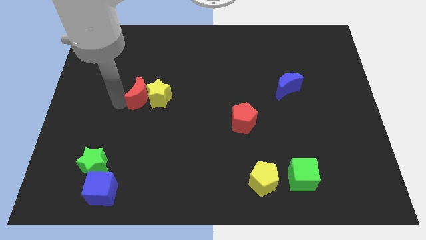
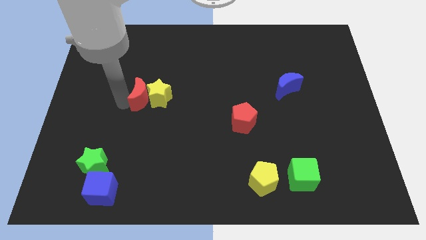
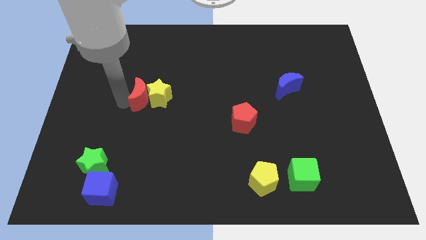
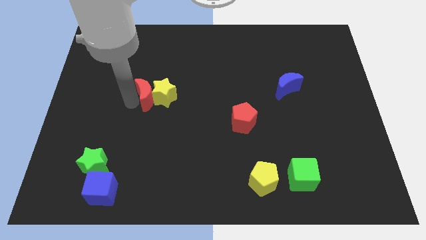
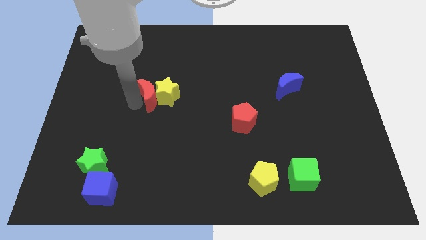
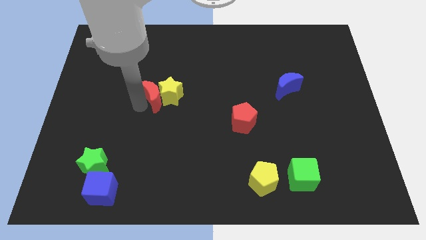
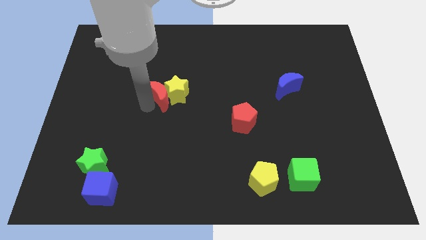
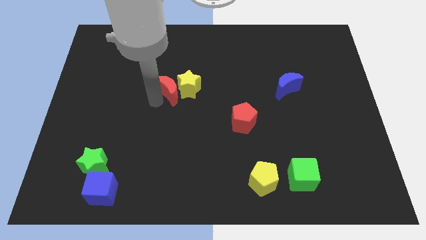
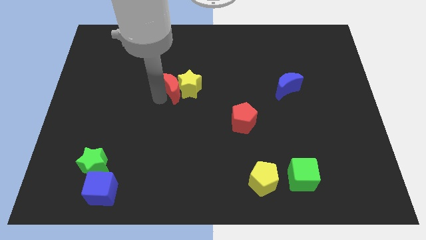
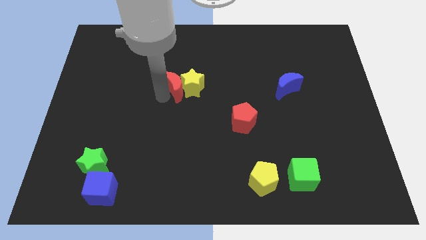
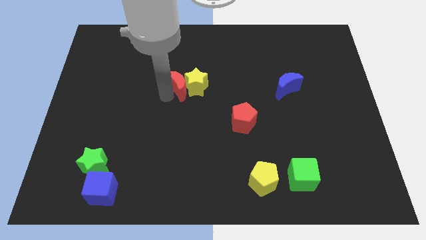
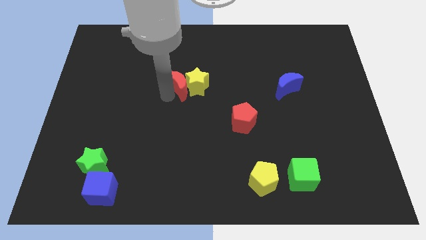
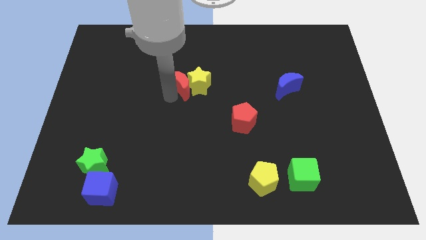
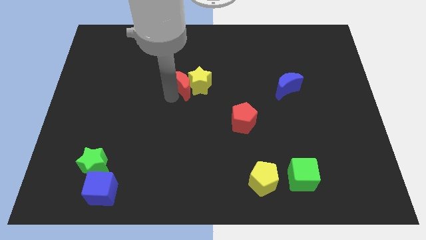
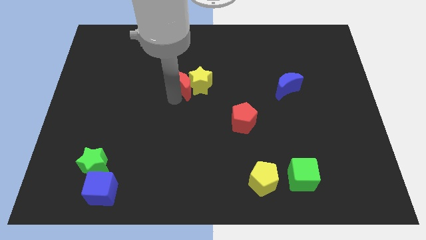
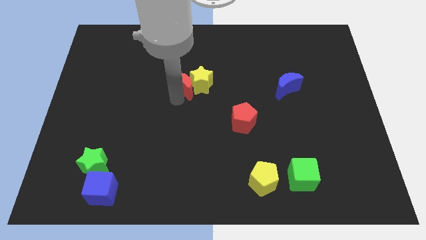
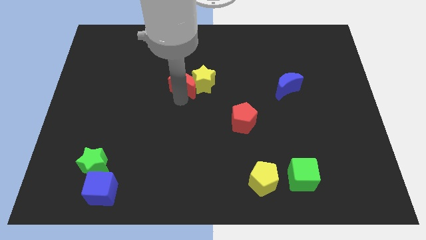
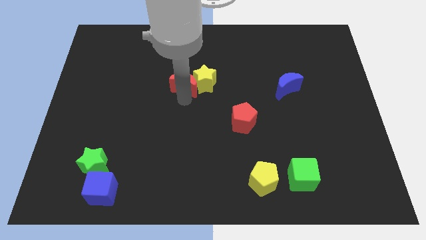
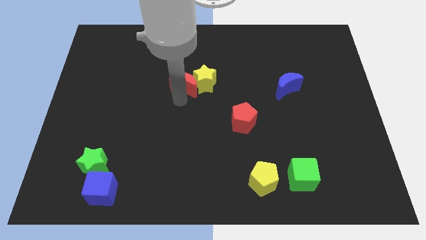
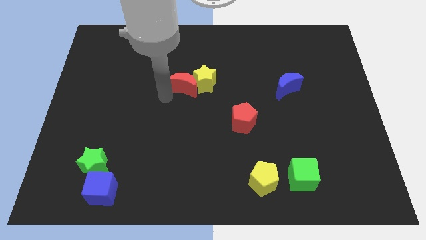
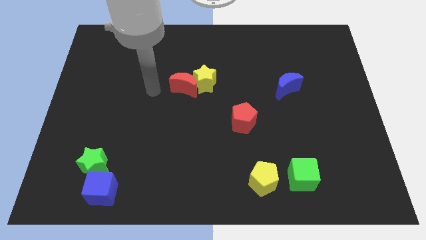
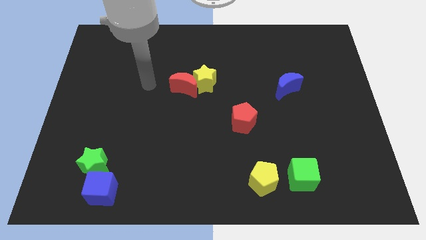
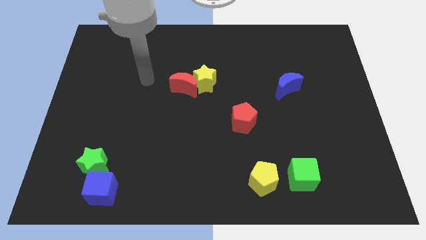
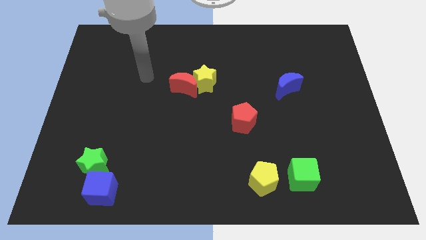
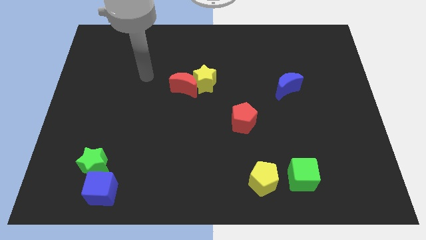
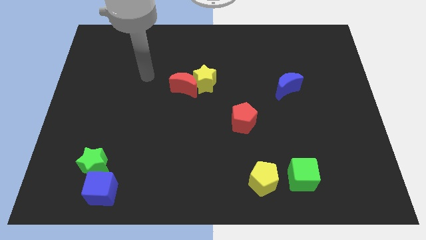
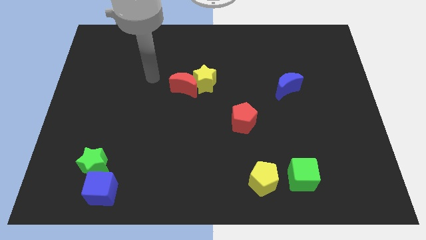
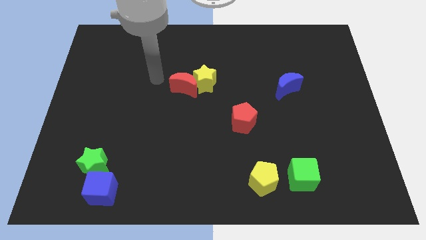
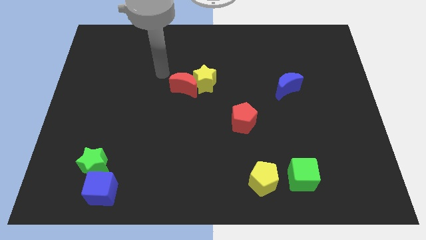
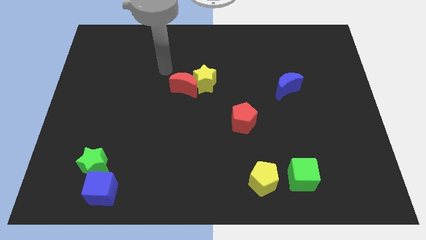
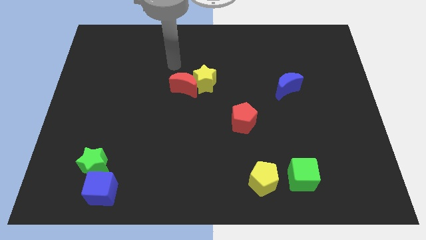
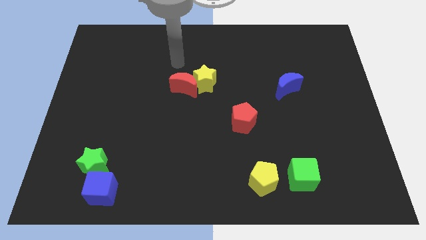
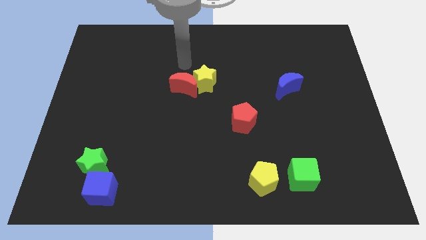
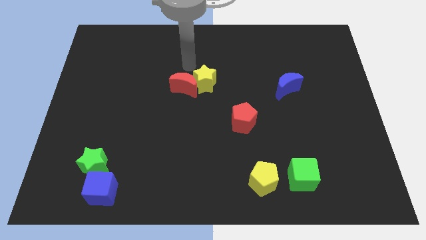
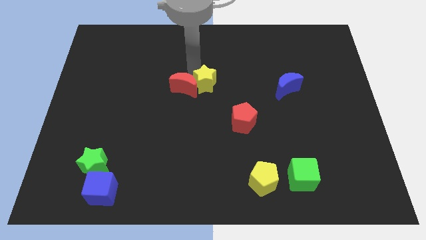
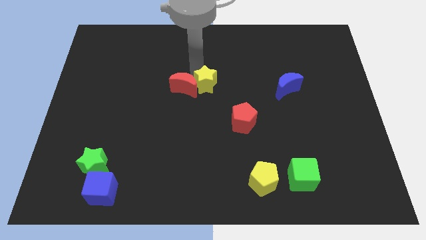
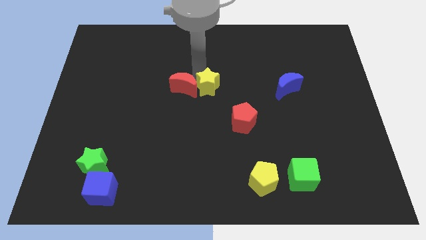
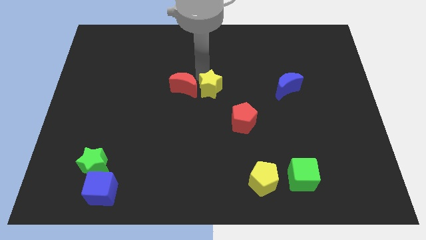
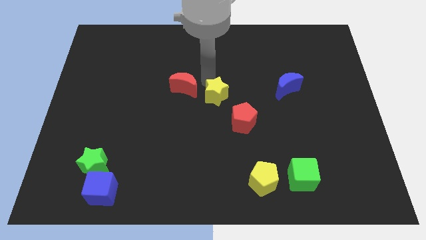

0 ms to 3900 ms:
move the red crescent along with yellow star to the centre of the board

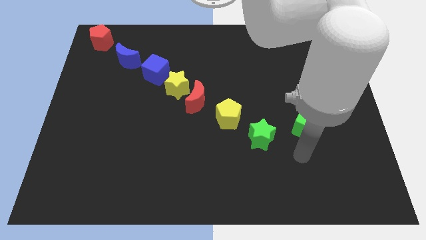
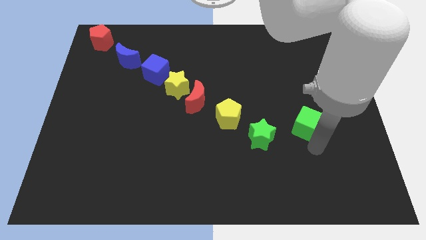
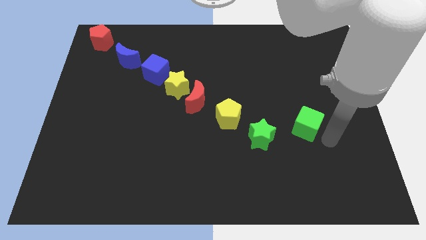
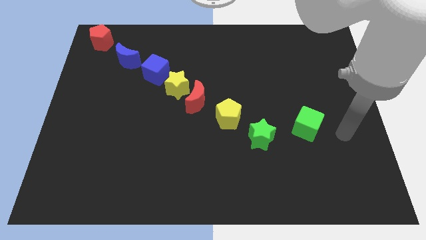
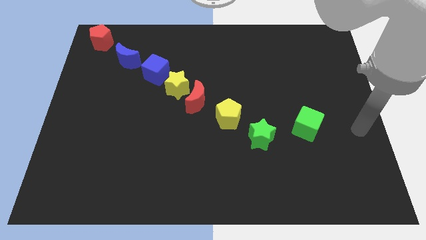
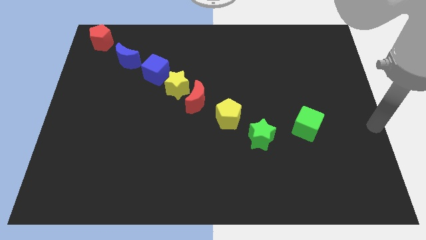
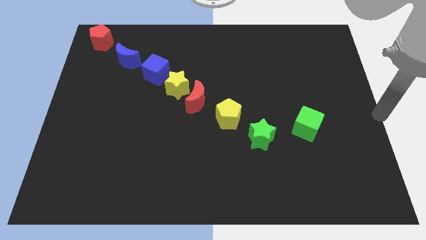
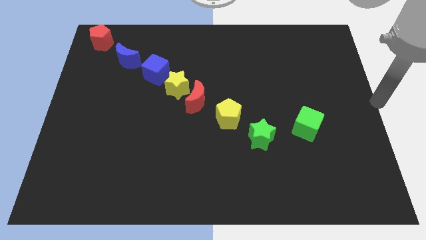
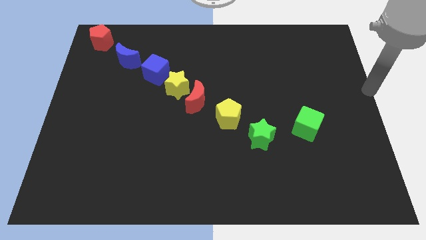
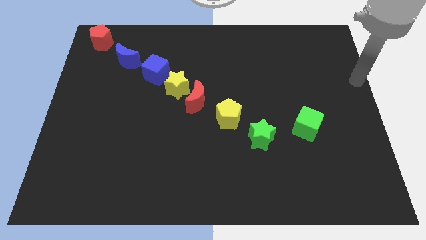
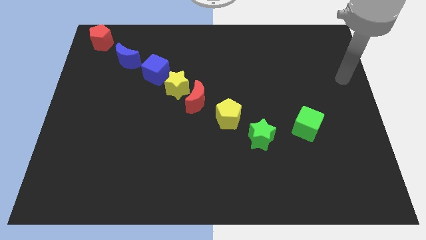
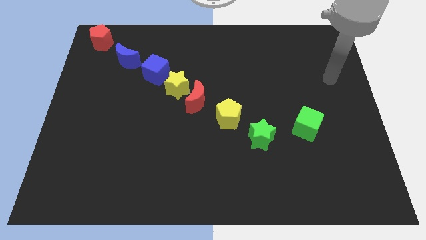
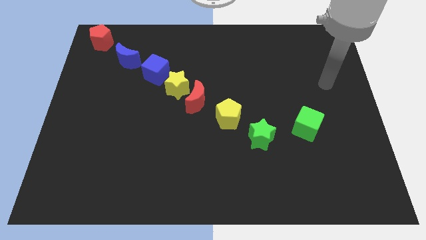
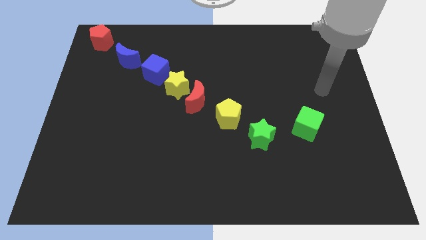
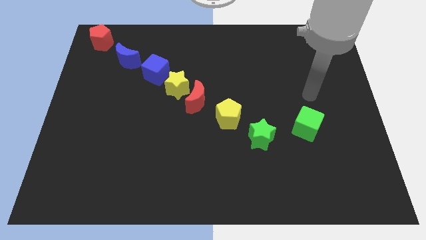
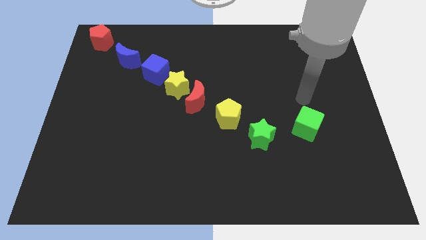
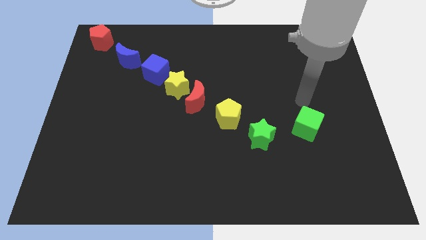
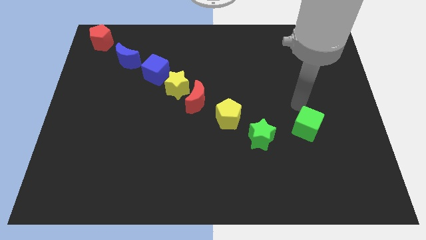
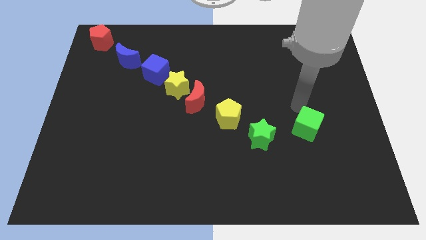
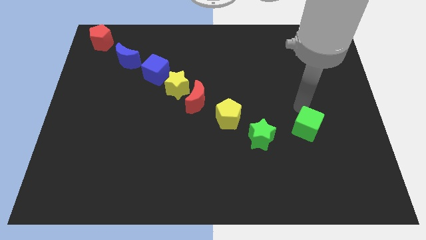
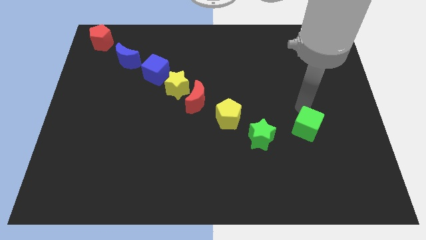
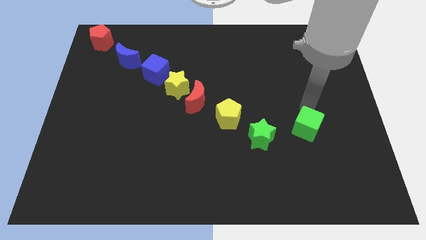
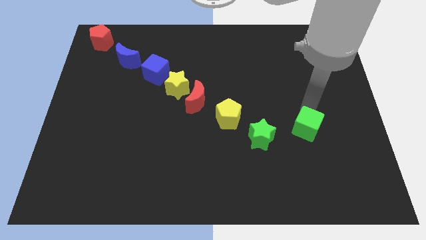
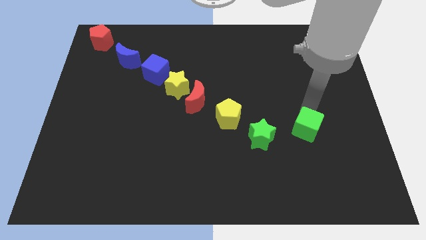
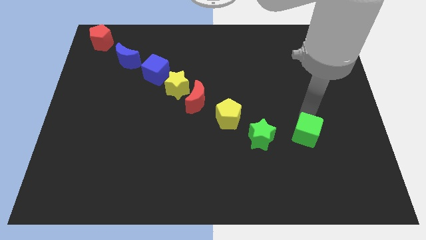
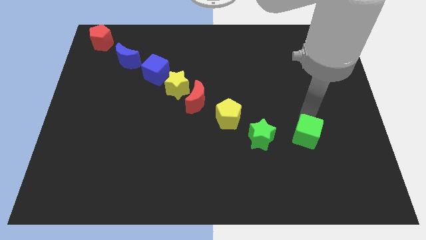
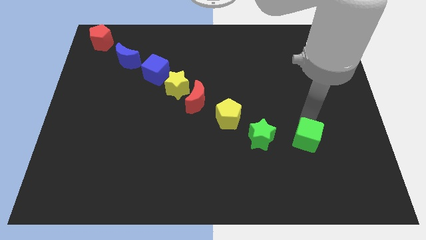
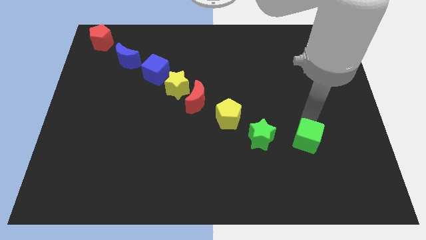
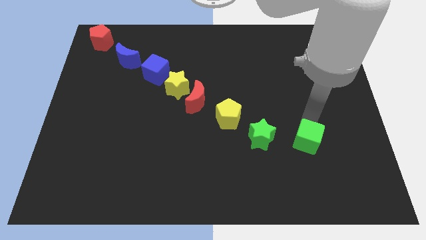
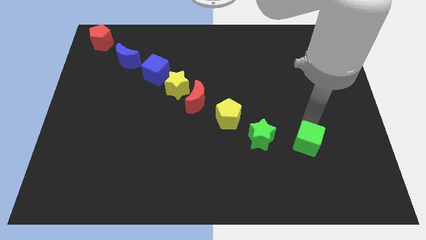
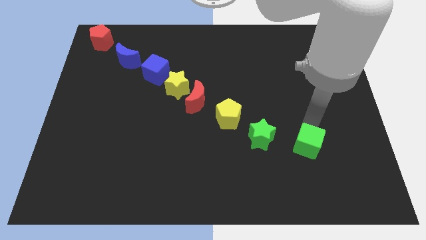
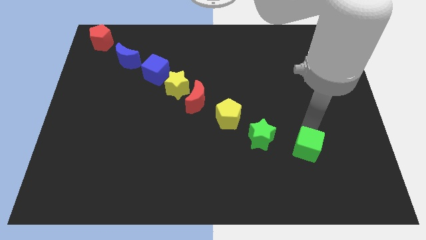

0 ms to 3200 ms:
place the green cube in a diagonal line

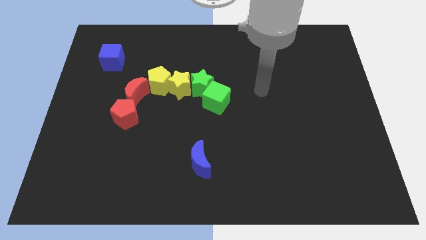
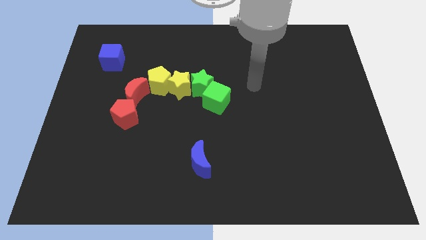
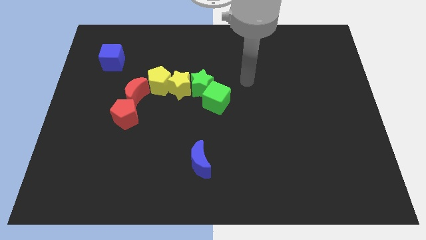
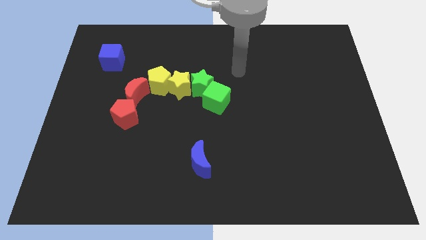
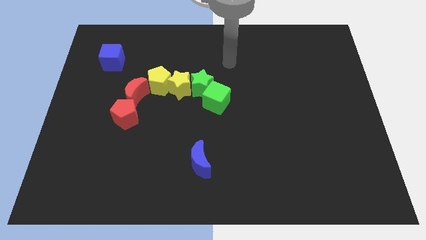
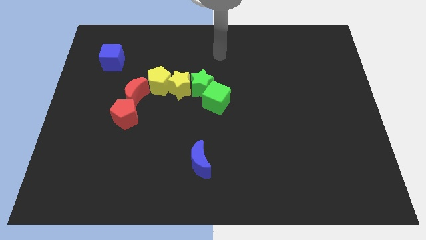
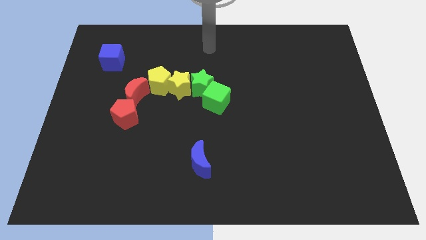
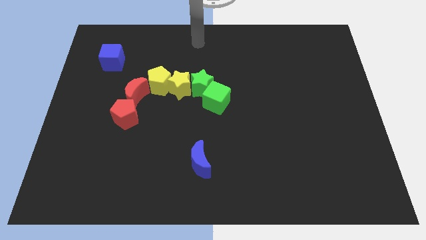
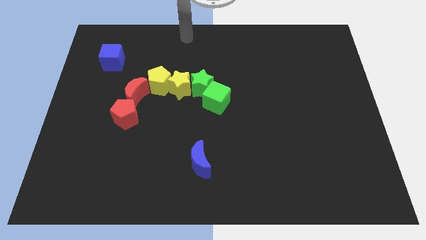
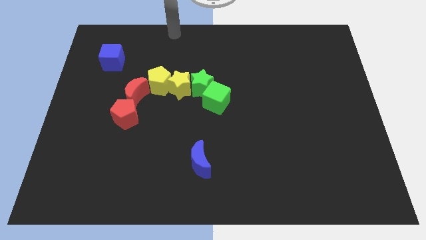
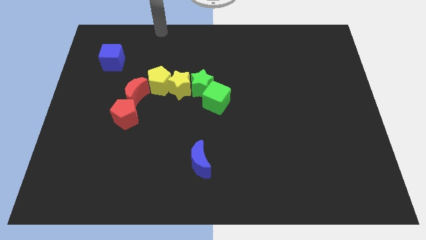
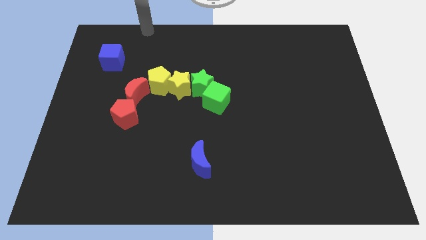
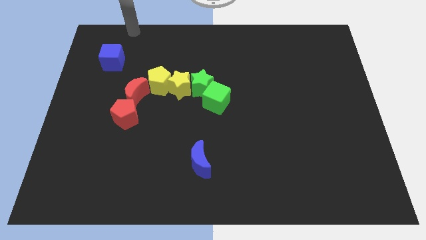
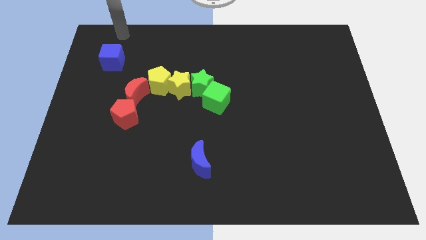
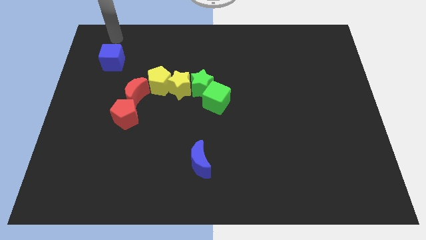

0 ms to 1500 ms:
move your arm towards the top left side of the board
